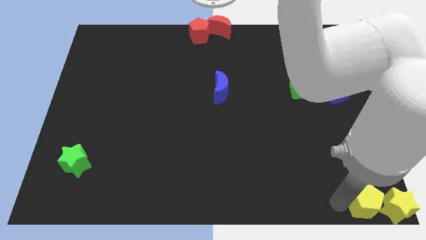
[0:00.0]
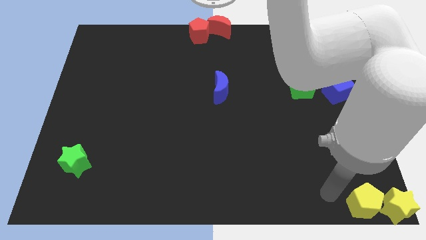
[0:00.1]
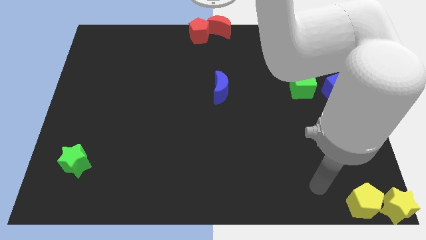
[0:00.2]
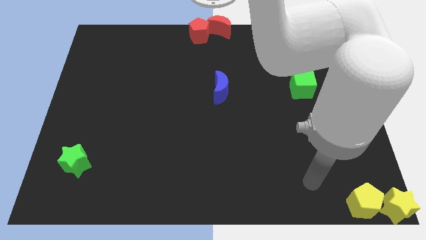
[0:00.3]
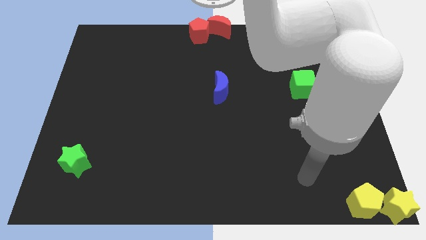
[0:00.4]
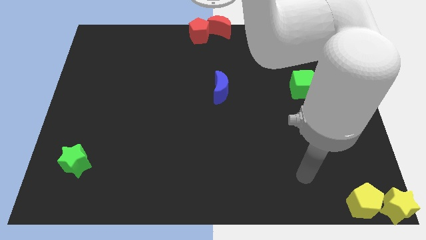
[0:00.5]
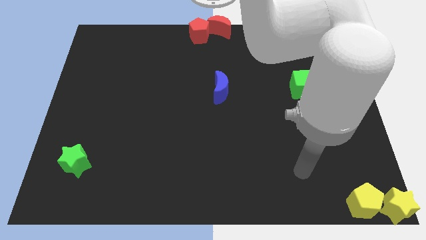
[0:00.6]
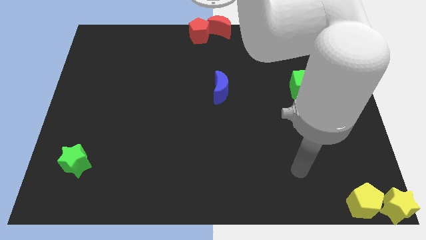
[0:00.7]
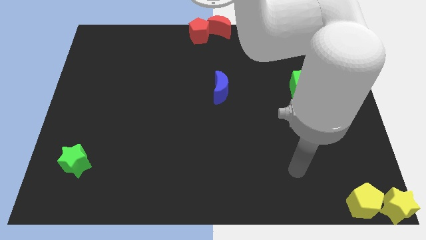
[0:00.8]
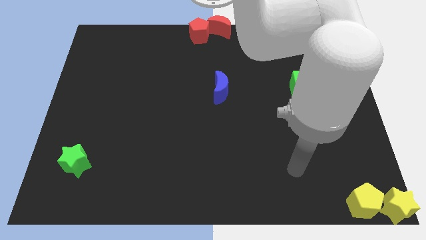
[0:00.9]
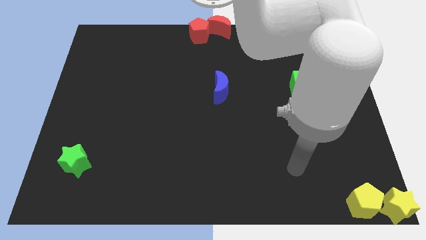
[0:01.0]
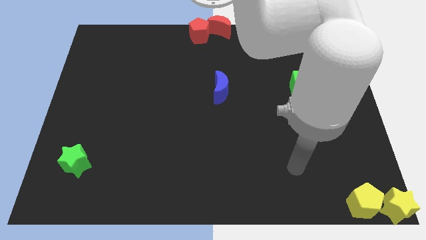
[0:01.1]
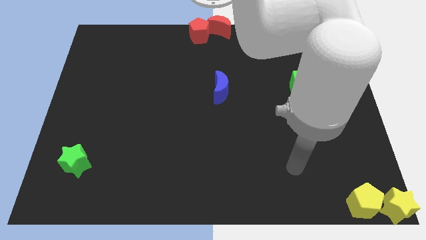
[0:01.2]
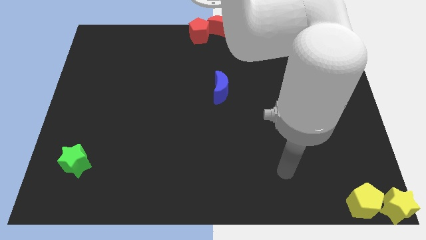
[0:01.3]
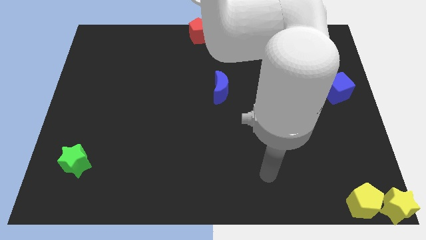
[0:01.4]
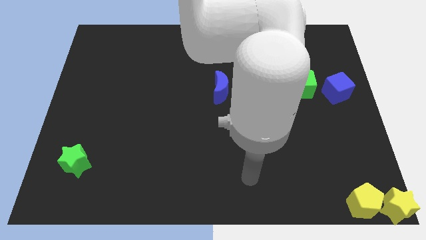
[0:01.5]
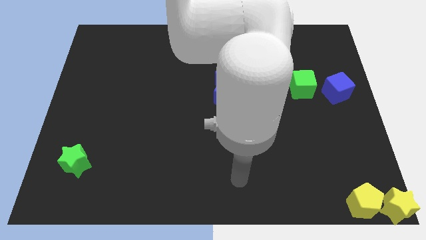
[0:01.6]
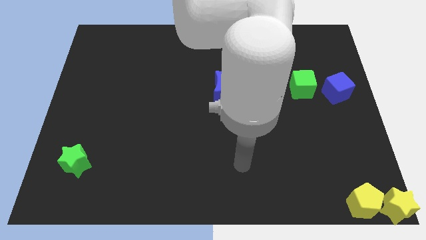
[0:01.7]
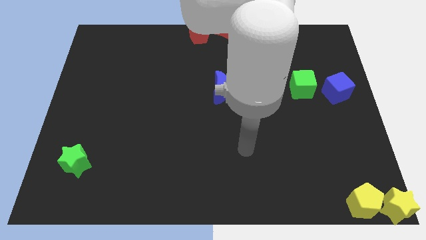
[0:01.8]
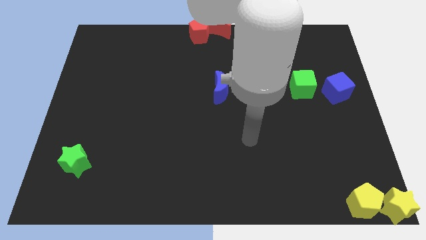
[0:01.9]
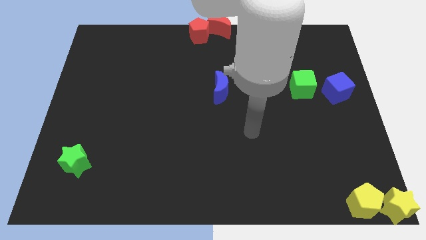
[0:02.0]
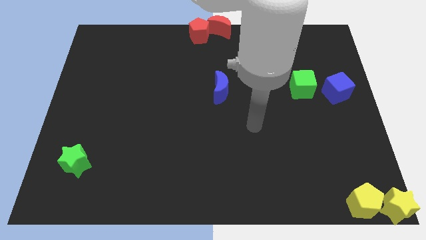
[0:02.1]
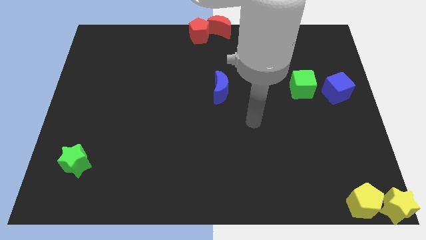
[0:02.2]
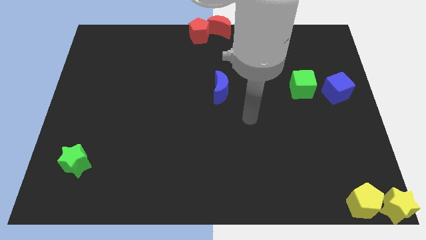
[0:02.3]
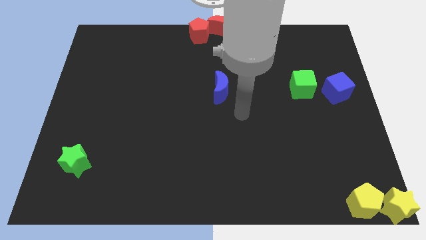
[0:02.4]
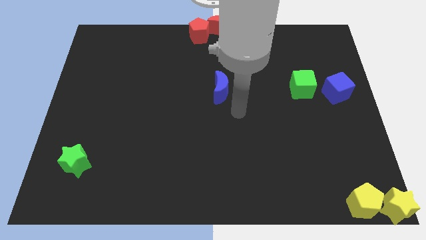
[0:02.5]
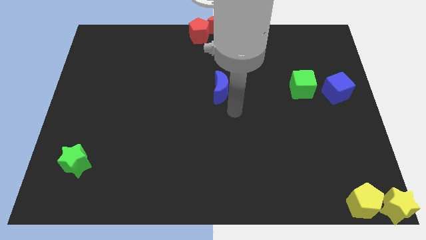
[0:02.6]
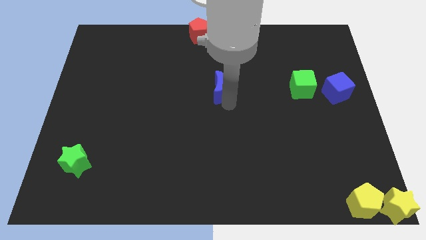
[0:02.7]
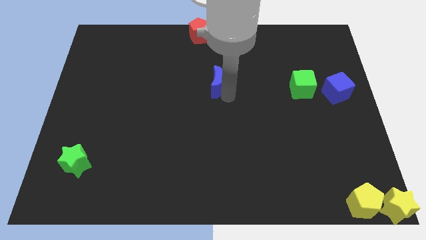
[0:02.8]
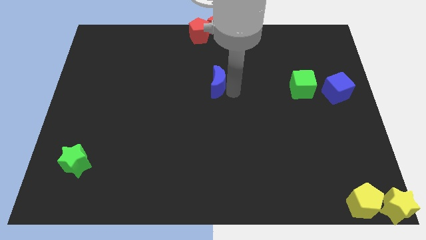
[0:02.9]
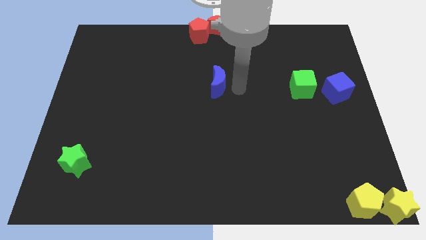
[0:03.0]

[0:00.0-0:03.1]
place your hand to the right of blue moon

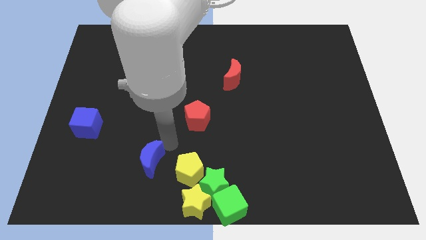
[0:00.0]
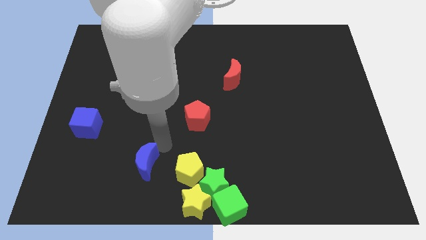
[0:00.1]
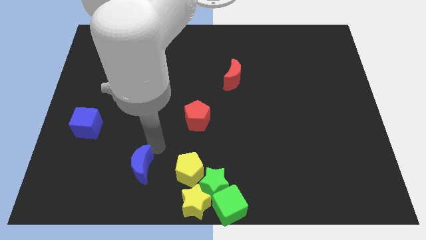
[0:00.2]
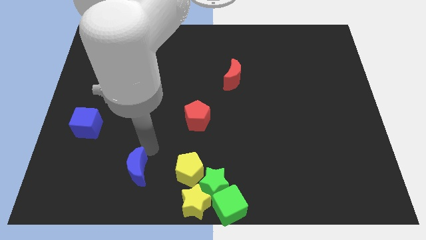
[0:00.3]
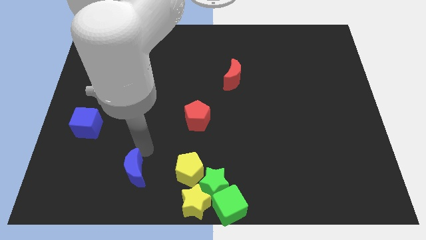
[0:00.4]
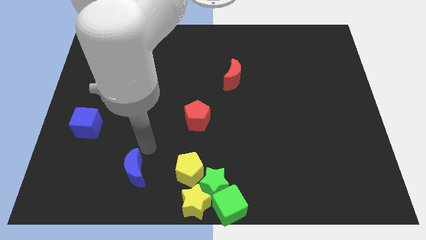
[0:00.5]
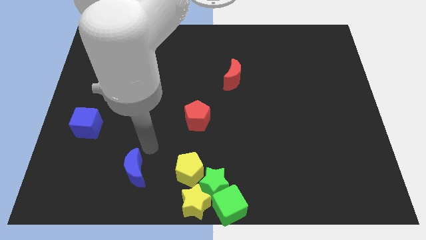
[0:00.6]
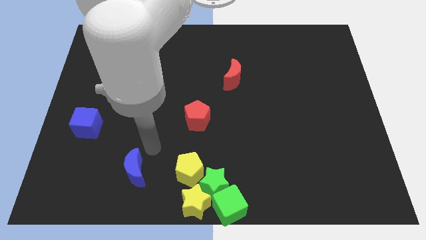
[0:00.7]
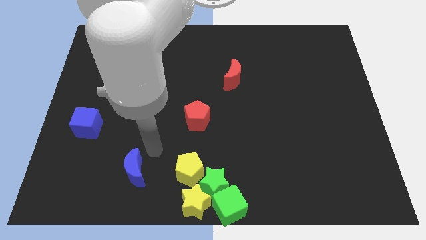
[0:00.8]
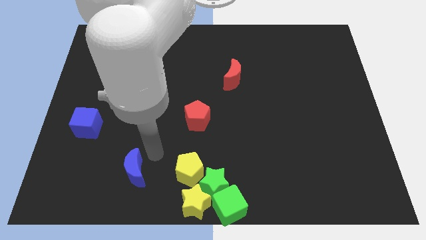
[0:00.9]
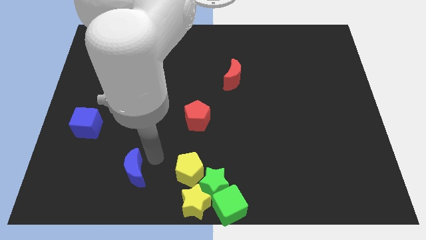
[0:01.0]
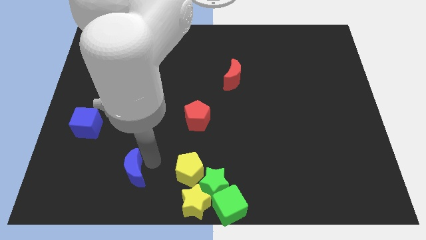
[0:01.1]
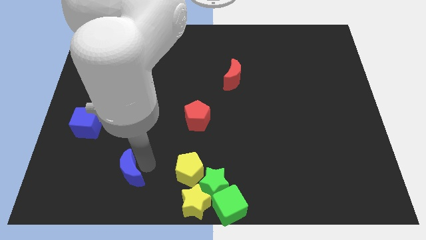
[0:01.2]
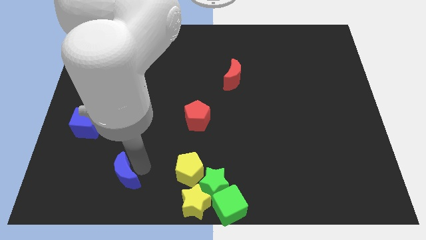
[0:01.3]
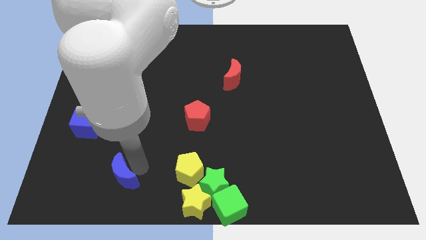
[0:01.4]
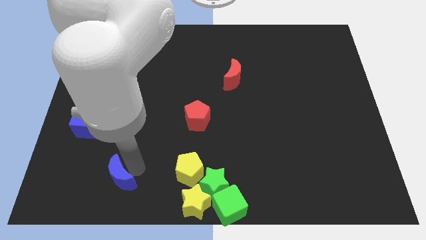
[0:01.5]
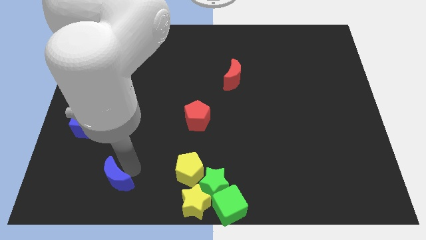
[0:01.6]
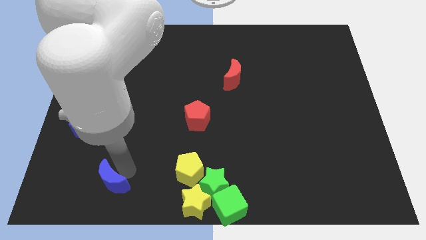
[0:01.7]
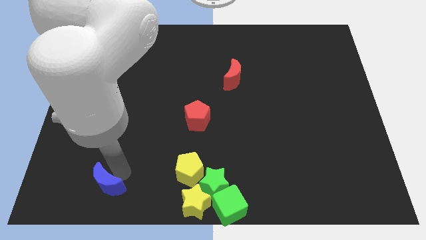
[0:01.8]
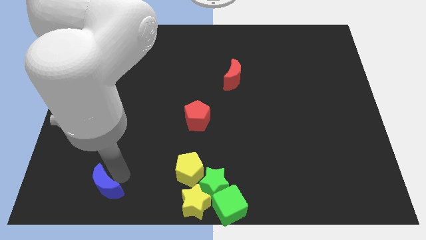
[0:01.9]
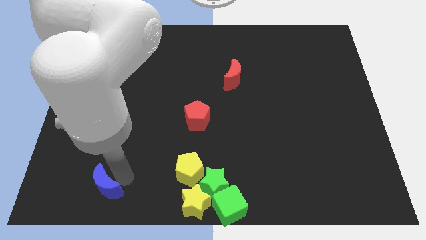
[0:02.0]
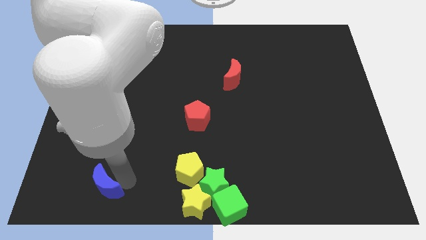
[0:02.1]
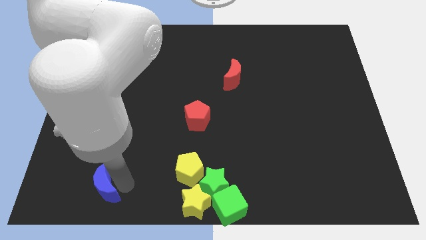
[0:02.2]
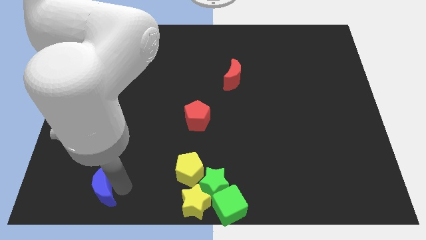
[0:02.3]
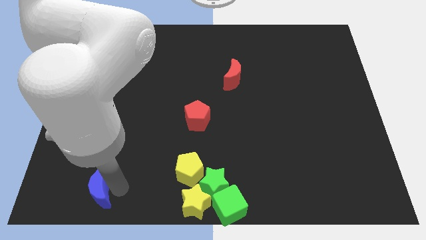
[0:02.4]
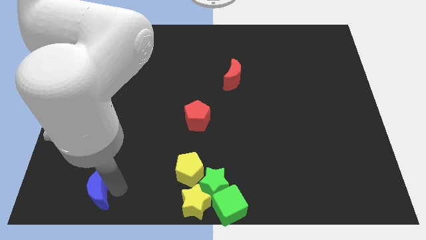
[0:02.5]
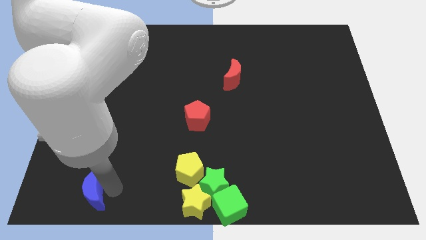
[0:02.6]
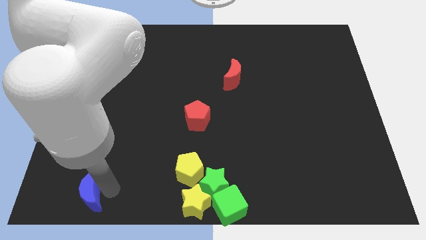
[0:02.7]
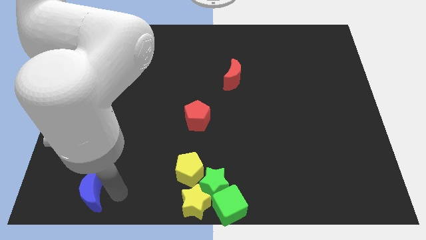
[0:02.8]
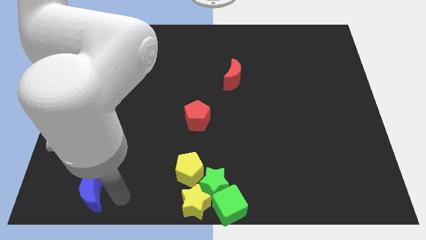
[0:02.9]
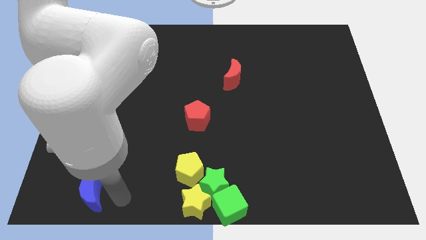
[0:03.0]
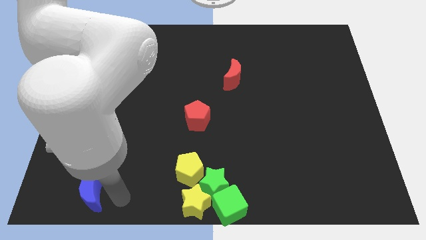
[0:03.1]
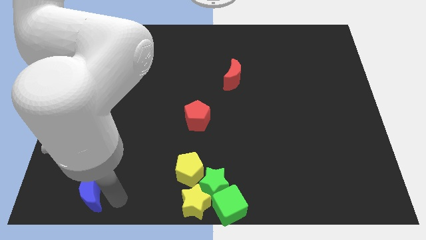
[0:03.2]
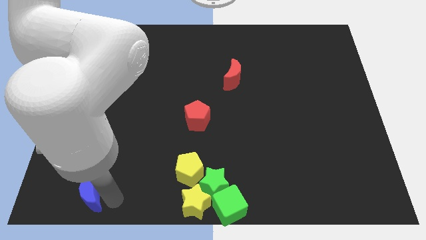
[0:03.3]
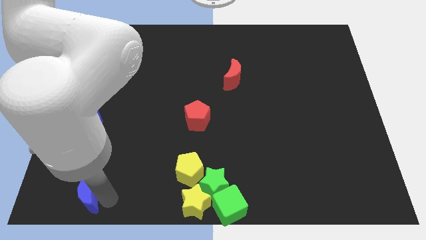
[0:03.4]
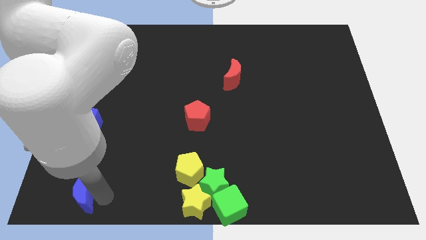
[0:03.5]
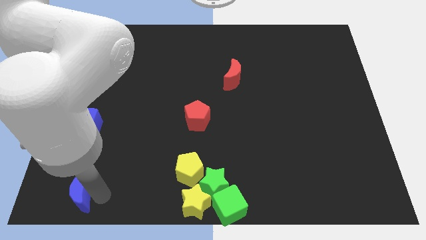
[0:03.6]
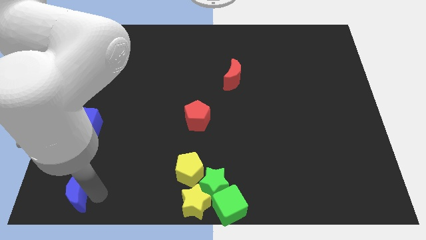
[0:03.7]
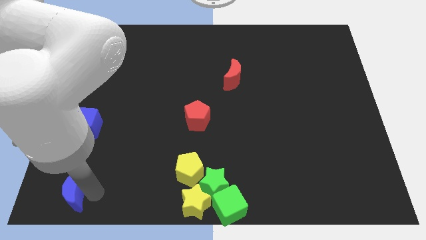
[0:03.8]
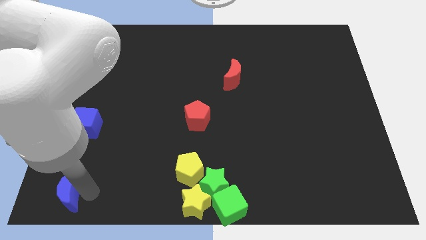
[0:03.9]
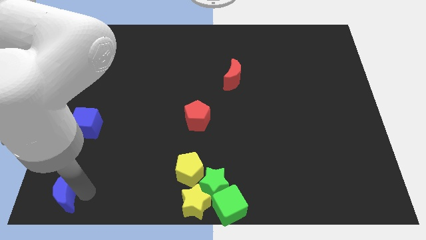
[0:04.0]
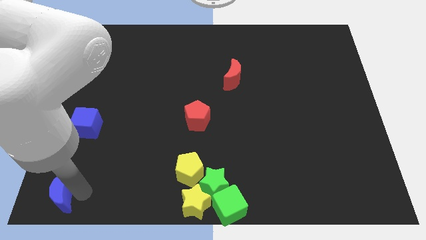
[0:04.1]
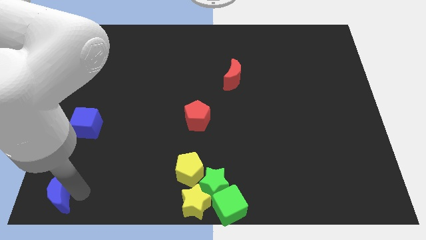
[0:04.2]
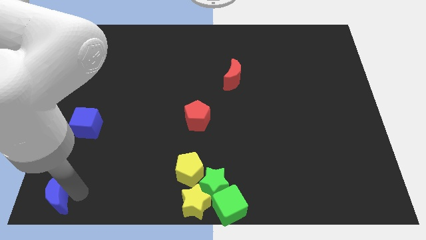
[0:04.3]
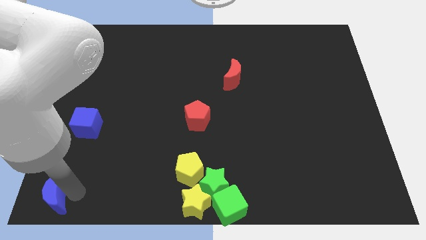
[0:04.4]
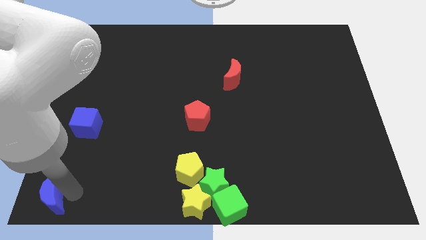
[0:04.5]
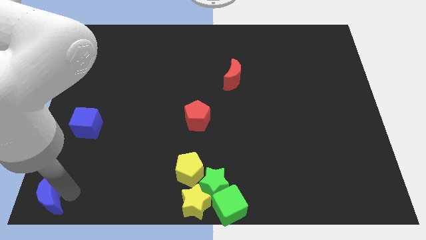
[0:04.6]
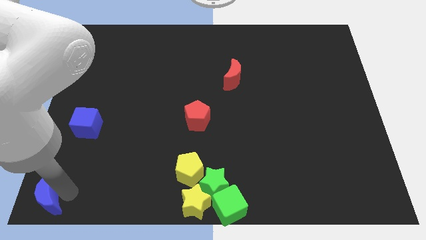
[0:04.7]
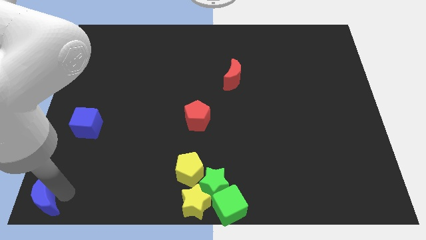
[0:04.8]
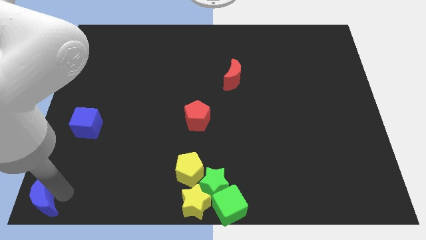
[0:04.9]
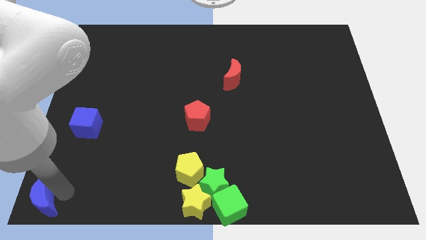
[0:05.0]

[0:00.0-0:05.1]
place the blue crescent to the bottom left side of the board

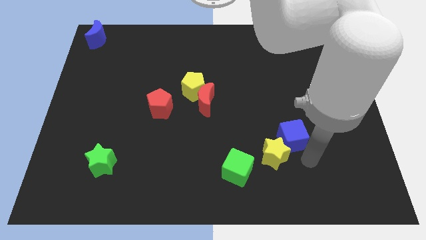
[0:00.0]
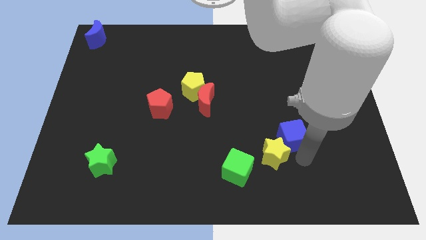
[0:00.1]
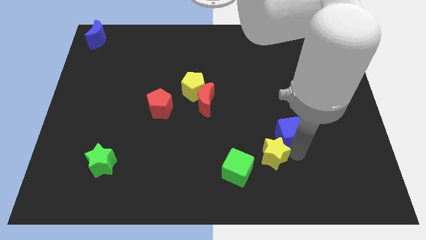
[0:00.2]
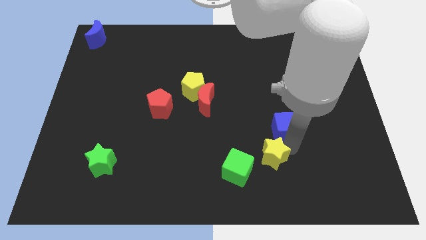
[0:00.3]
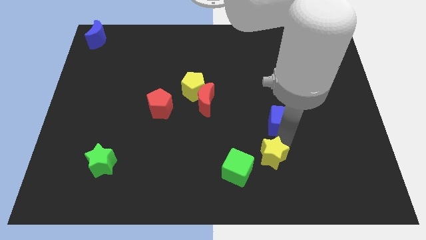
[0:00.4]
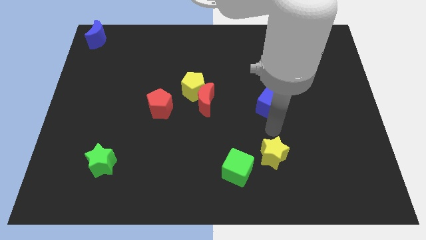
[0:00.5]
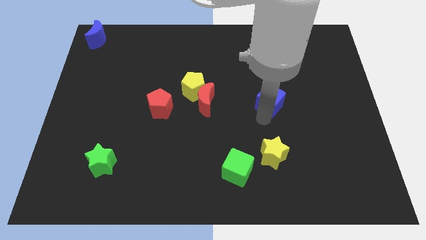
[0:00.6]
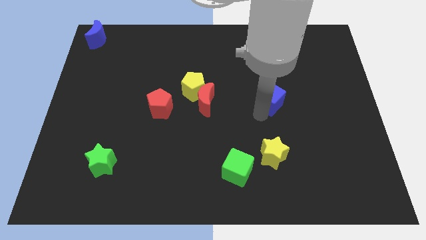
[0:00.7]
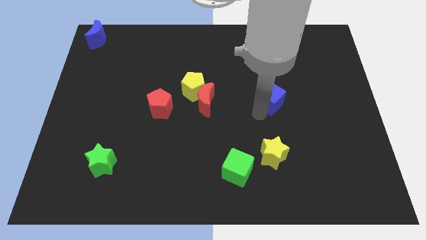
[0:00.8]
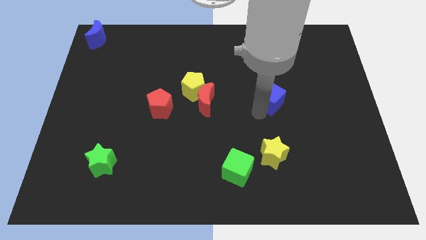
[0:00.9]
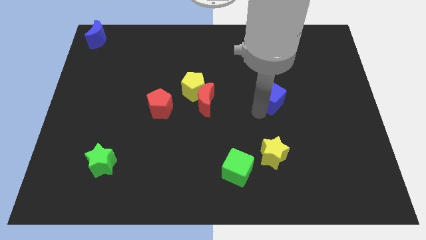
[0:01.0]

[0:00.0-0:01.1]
separate blue cube from yellow star
